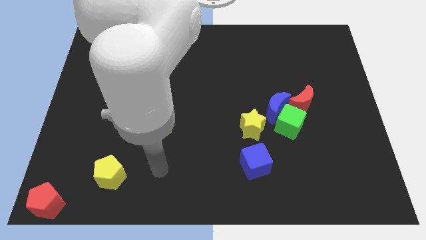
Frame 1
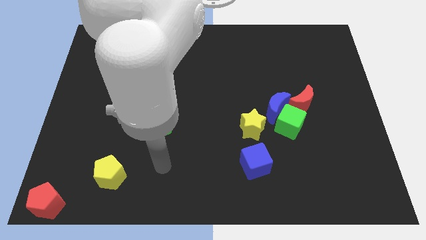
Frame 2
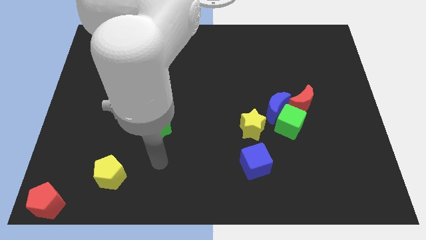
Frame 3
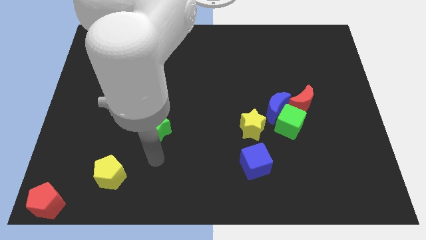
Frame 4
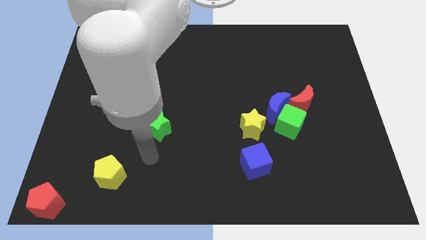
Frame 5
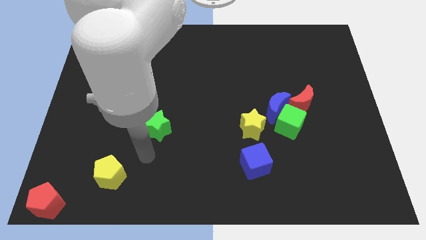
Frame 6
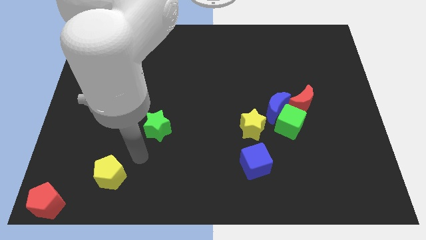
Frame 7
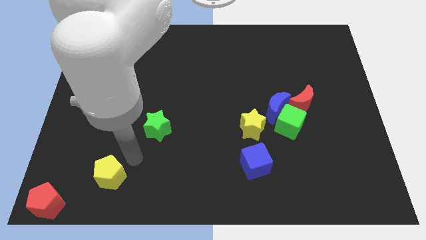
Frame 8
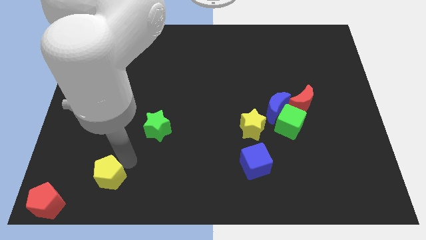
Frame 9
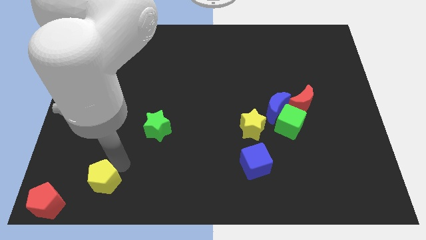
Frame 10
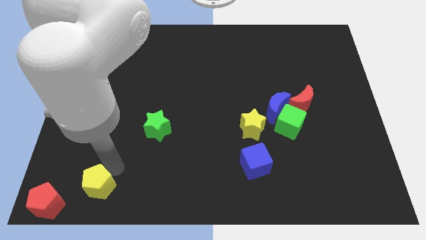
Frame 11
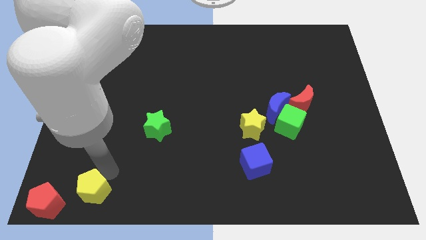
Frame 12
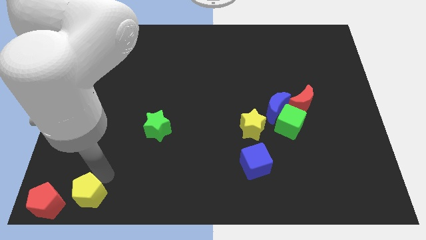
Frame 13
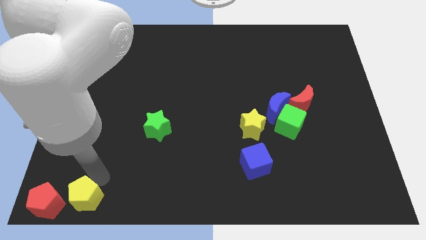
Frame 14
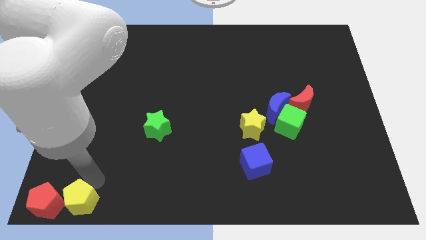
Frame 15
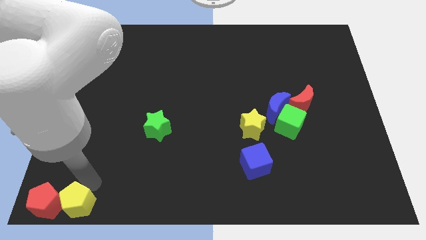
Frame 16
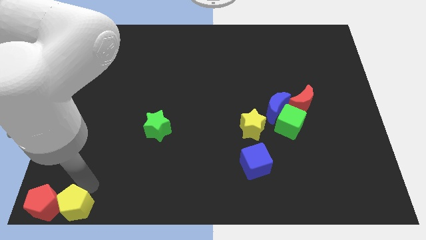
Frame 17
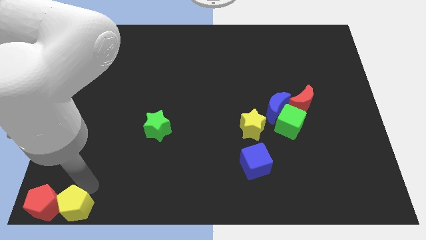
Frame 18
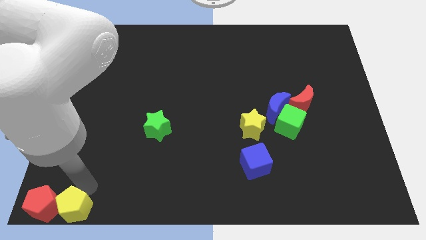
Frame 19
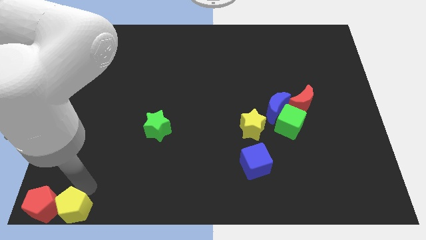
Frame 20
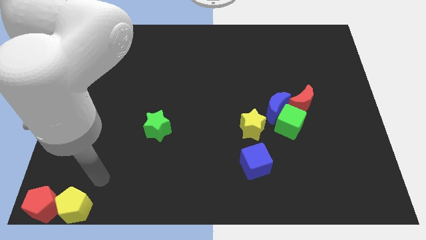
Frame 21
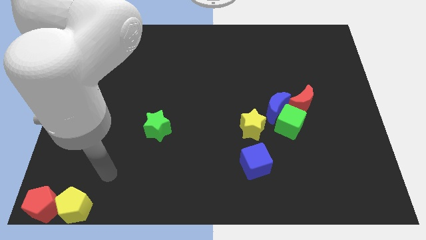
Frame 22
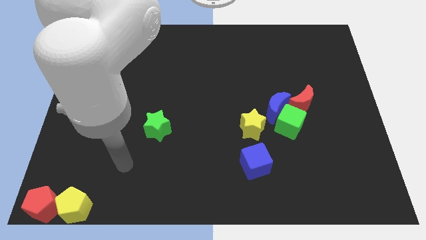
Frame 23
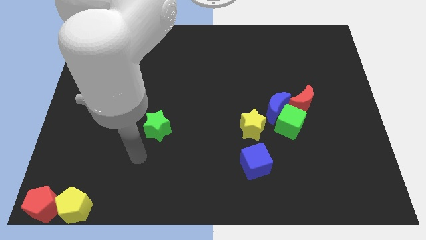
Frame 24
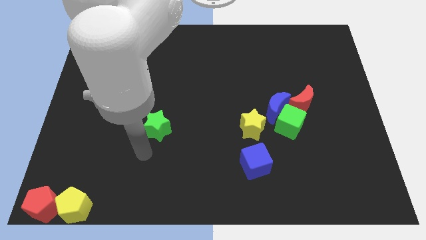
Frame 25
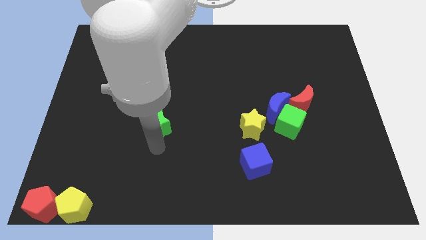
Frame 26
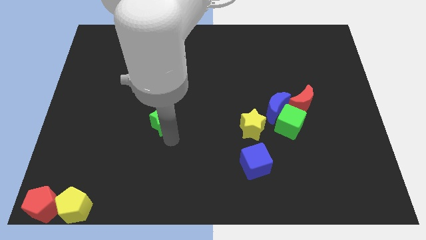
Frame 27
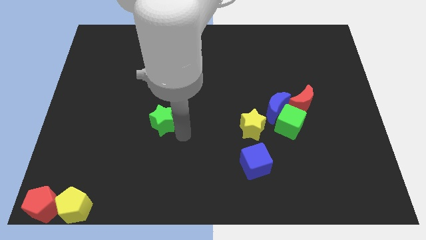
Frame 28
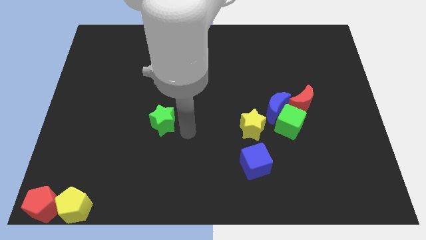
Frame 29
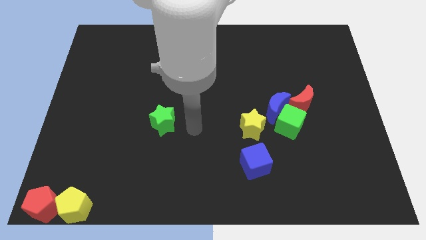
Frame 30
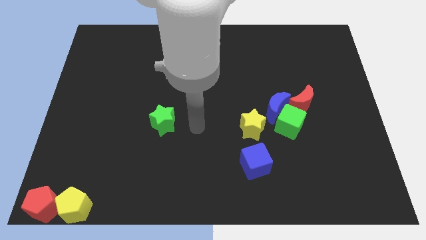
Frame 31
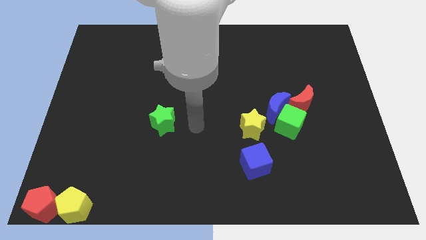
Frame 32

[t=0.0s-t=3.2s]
place the yellow pentagon towards the right side of the red pentagon

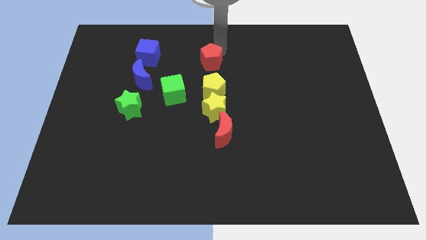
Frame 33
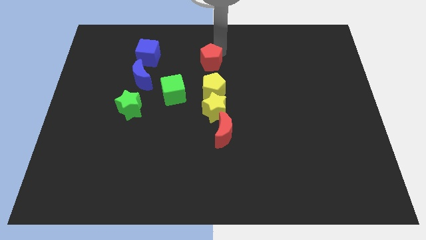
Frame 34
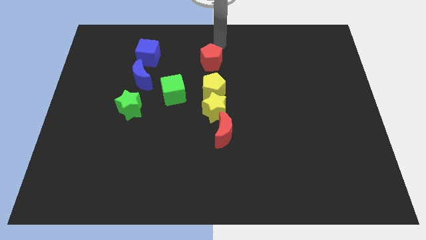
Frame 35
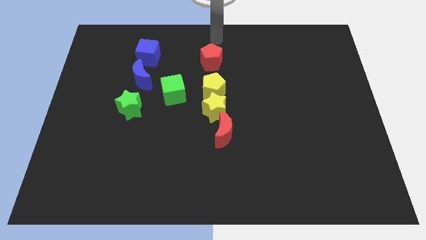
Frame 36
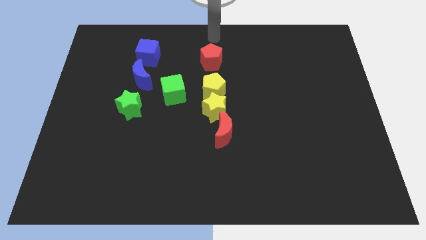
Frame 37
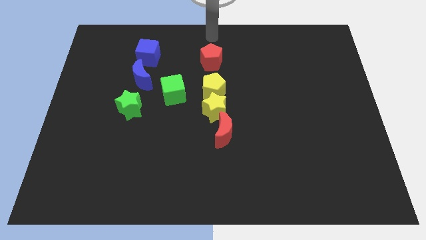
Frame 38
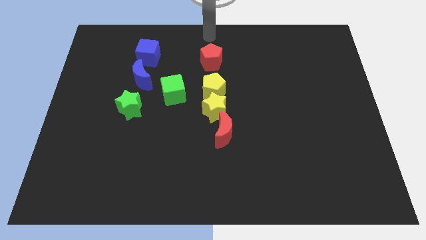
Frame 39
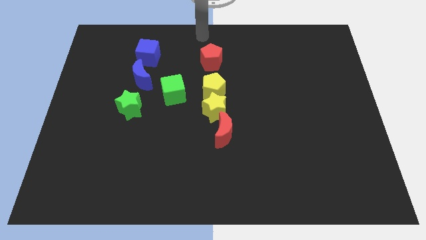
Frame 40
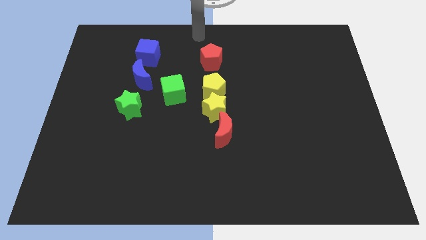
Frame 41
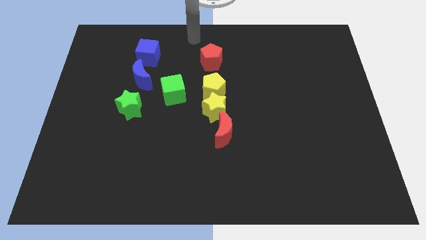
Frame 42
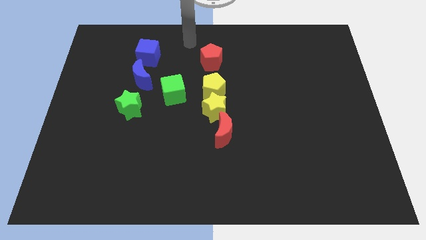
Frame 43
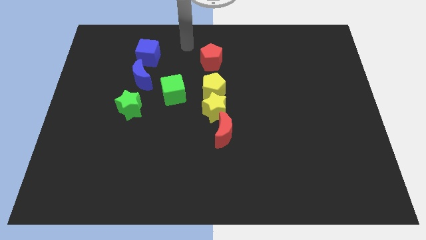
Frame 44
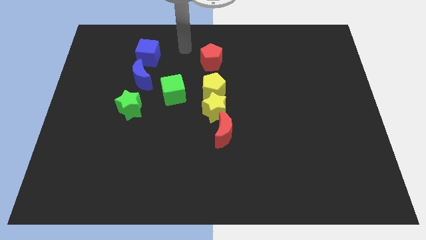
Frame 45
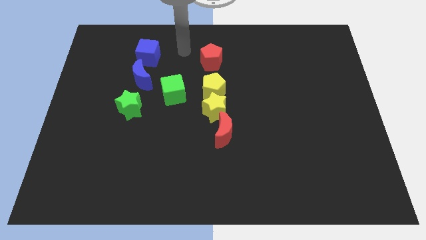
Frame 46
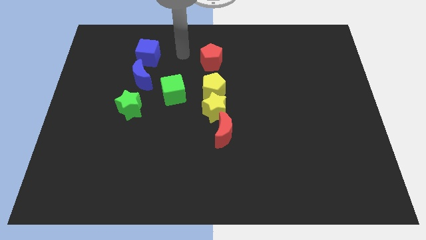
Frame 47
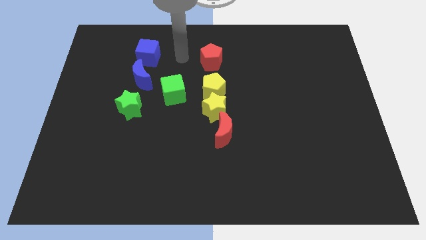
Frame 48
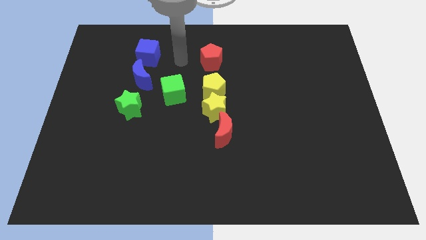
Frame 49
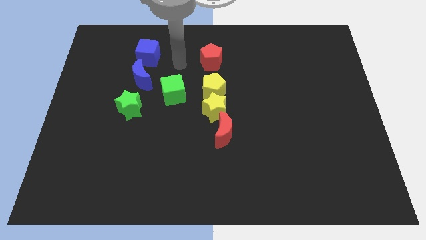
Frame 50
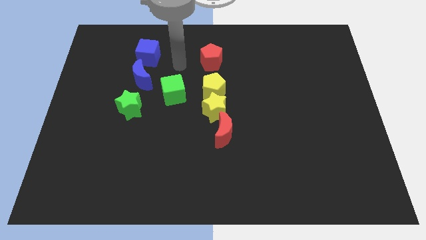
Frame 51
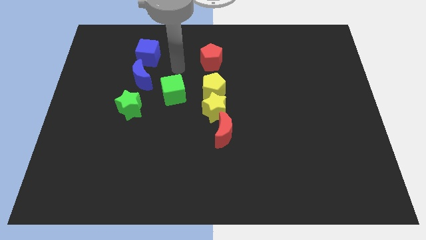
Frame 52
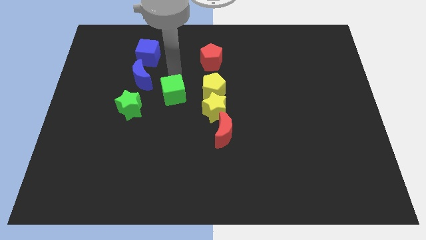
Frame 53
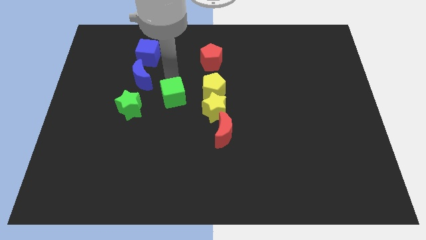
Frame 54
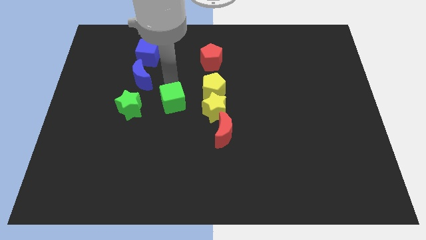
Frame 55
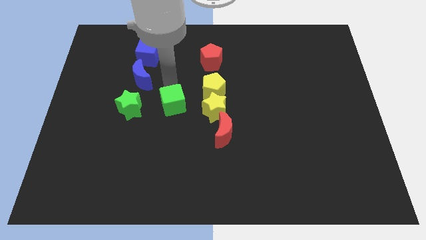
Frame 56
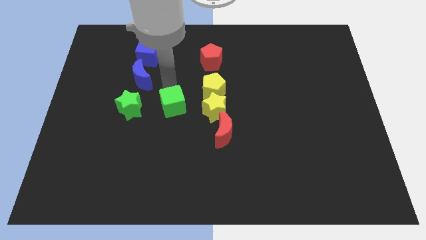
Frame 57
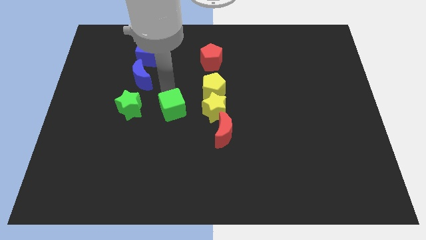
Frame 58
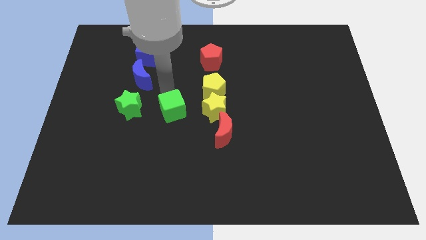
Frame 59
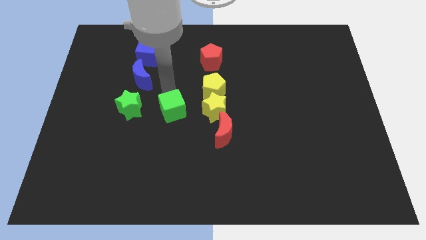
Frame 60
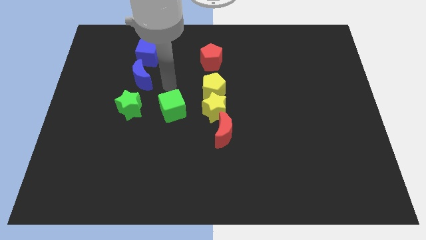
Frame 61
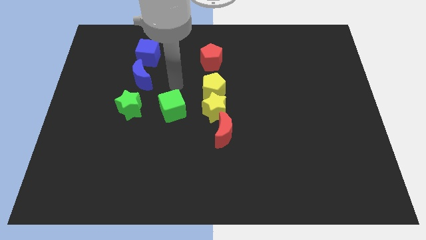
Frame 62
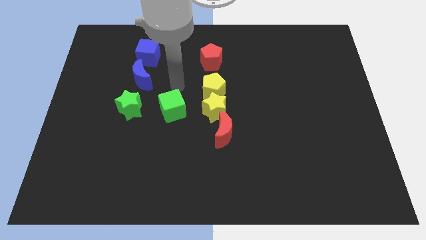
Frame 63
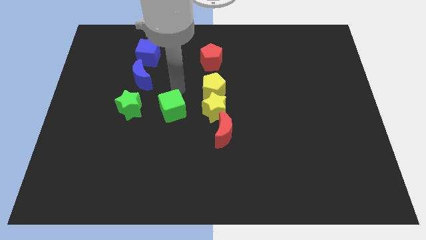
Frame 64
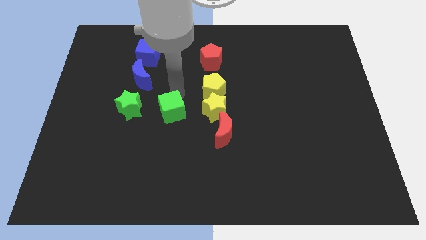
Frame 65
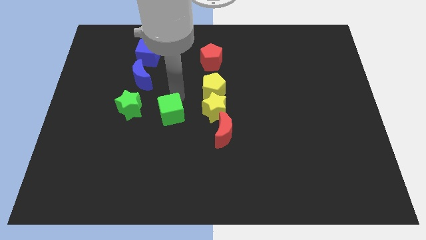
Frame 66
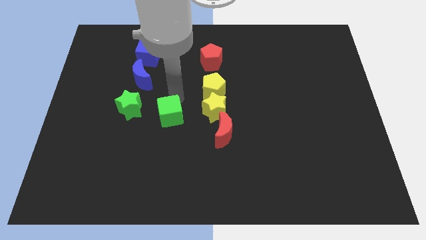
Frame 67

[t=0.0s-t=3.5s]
put the green cube horizontally in between the green star and yellow star

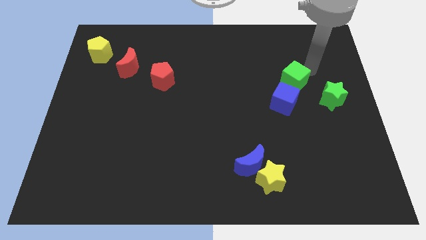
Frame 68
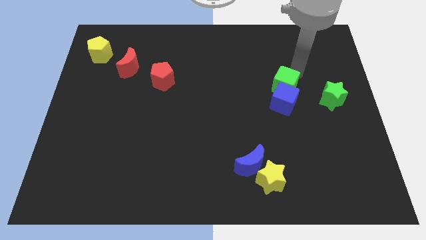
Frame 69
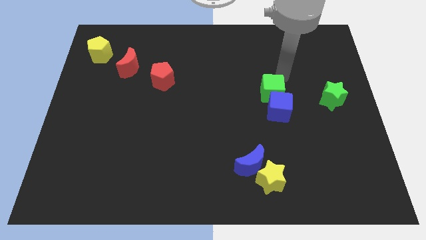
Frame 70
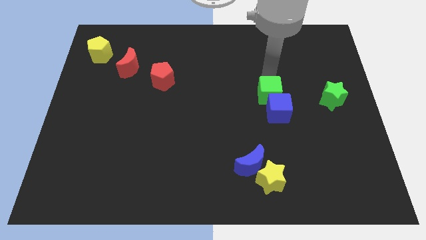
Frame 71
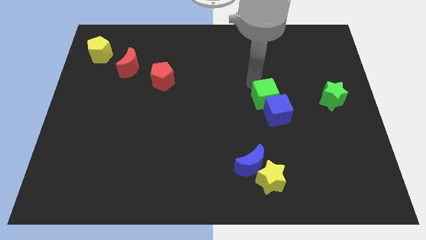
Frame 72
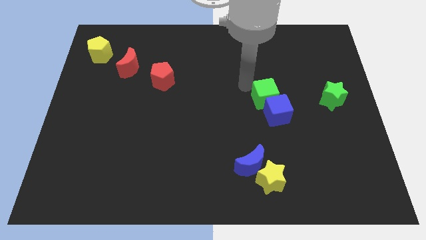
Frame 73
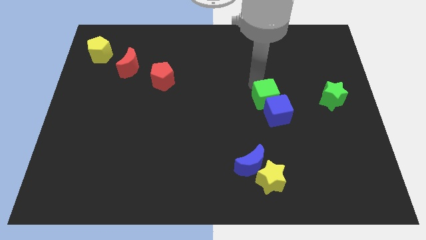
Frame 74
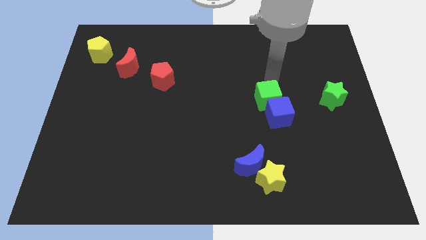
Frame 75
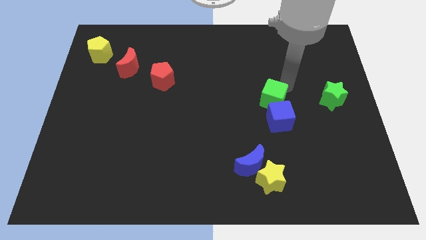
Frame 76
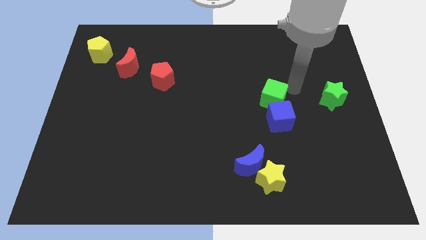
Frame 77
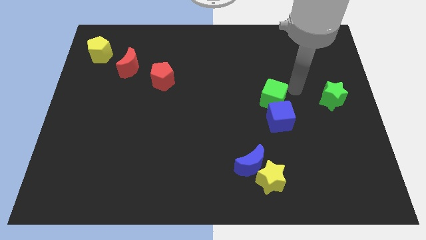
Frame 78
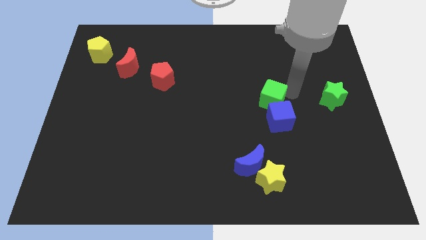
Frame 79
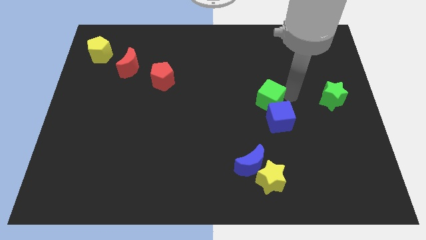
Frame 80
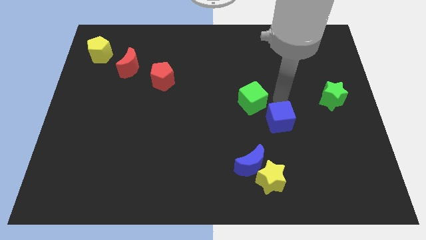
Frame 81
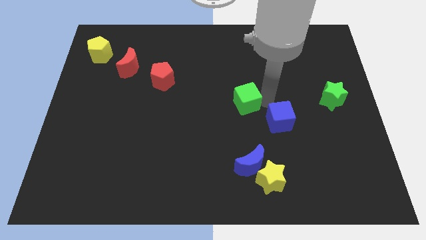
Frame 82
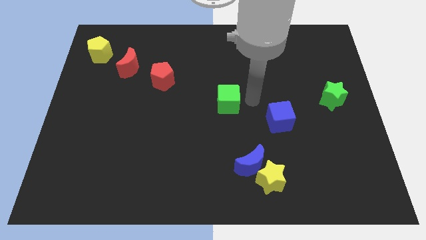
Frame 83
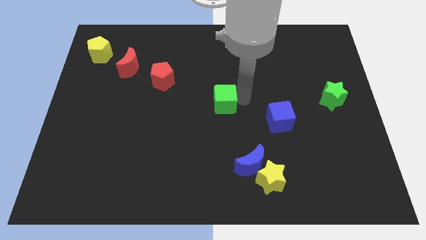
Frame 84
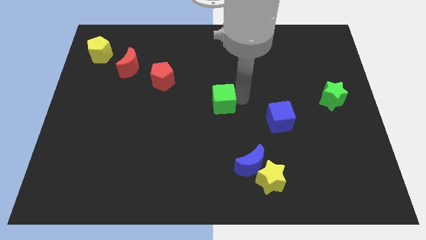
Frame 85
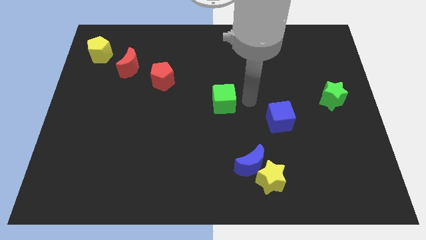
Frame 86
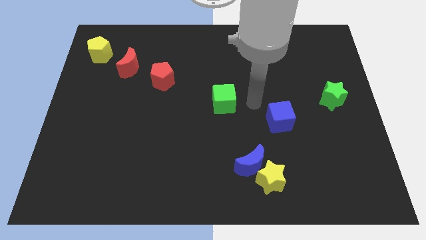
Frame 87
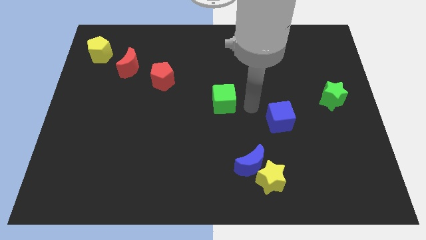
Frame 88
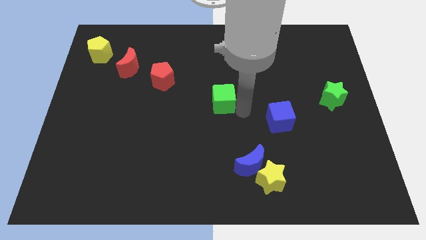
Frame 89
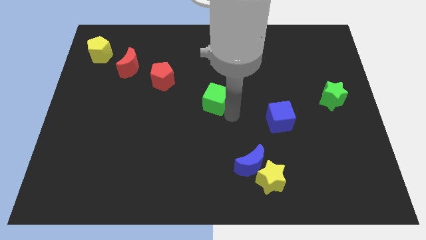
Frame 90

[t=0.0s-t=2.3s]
drag green cube towards center of the board
